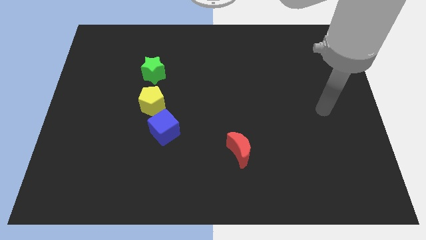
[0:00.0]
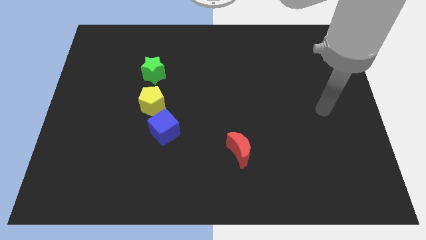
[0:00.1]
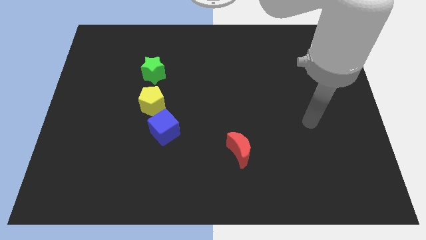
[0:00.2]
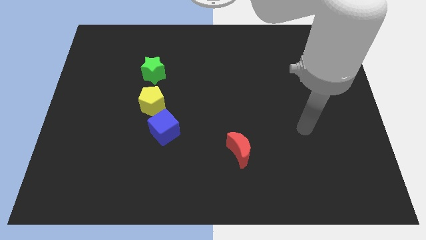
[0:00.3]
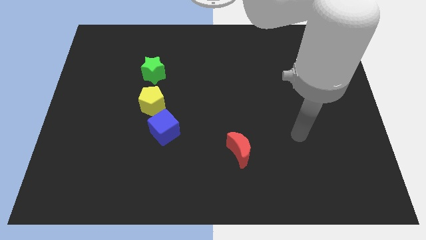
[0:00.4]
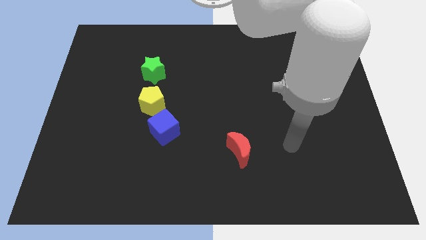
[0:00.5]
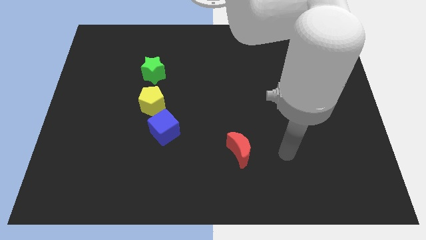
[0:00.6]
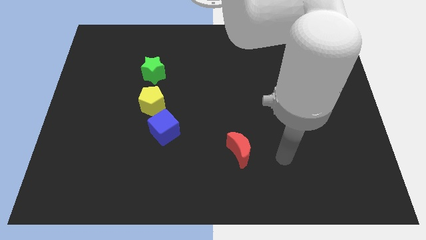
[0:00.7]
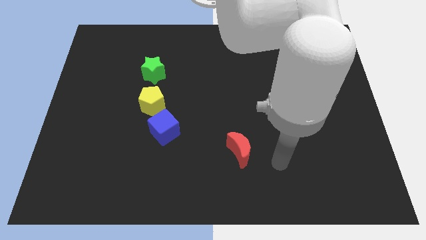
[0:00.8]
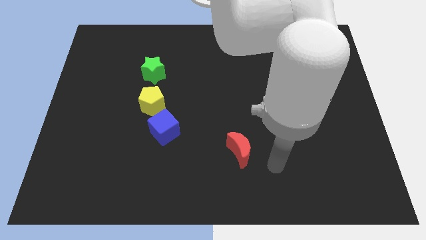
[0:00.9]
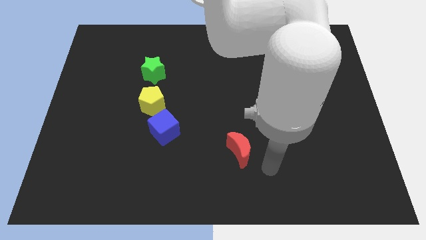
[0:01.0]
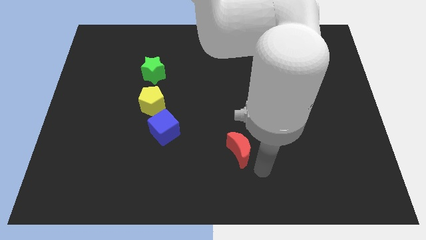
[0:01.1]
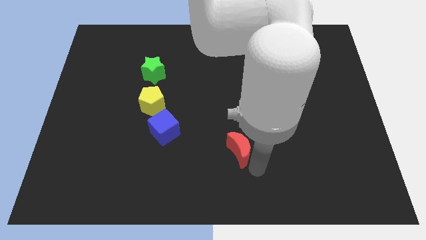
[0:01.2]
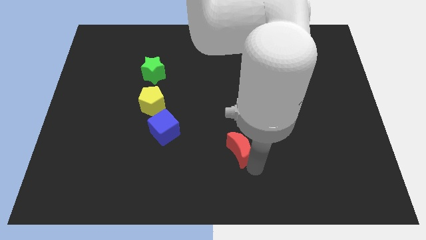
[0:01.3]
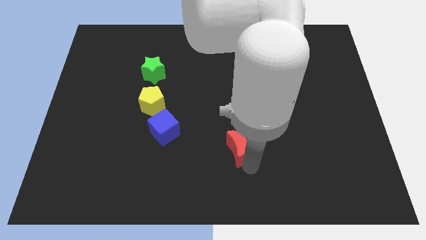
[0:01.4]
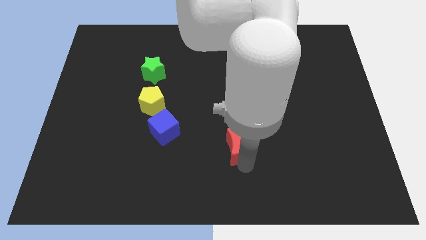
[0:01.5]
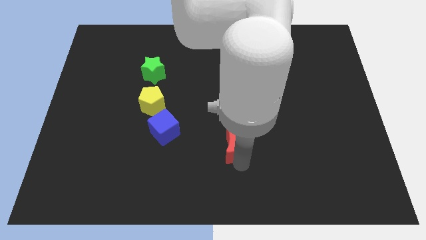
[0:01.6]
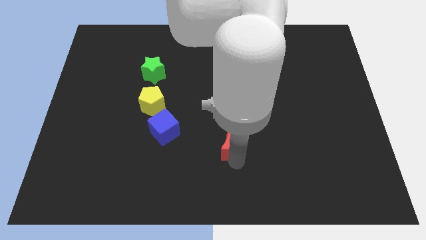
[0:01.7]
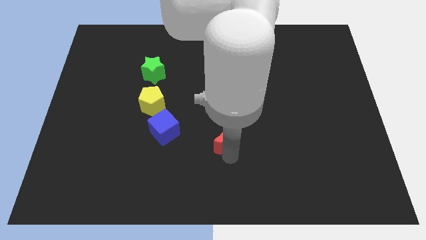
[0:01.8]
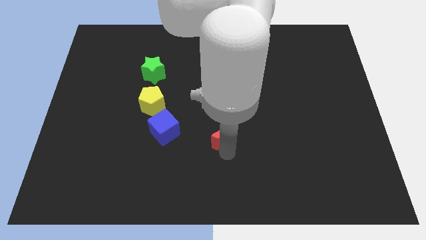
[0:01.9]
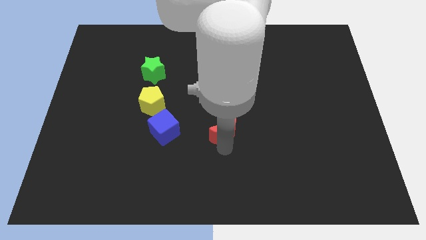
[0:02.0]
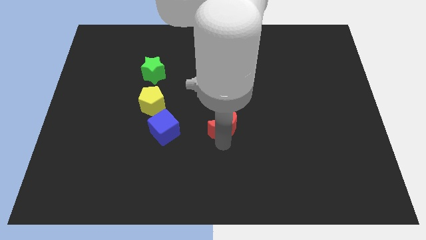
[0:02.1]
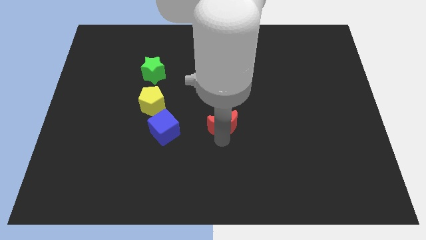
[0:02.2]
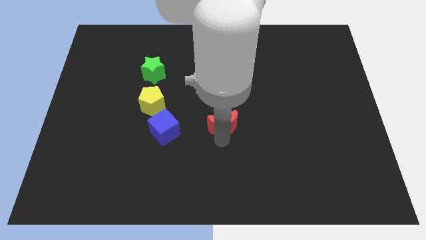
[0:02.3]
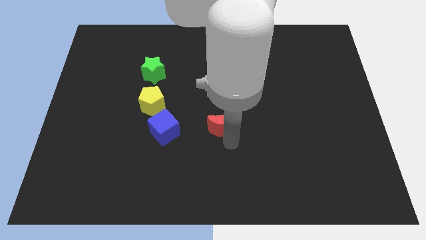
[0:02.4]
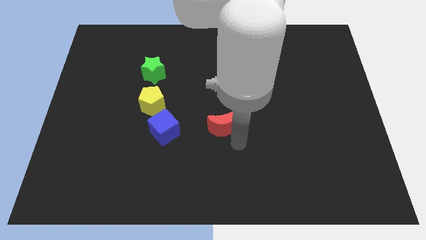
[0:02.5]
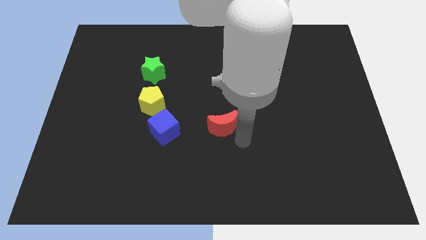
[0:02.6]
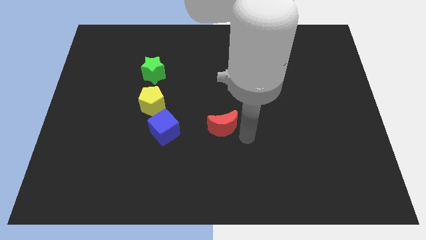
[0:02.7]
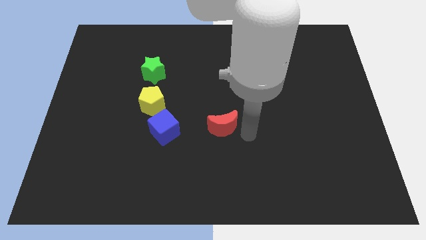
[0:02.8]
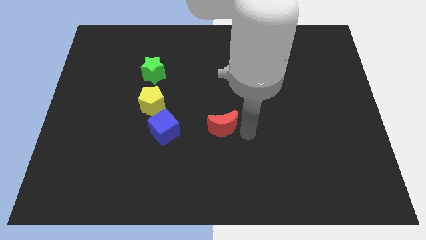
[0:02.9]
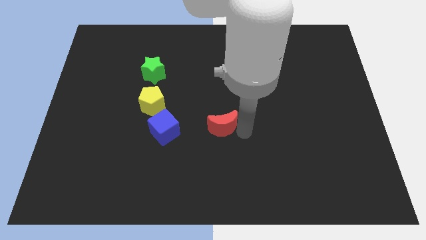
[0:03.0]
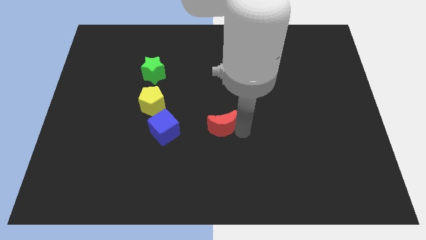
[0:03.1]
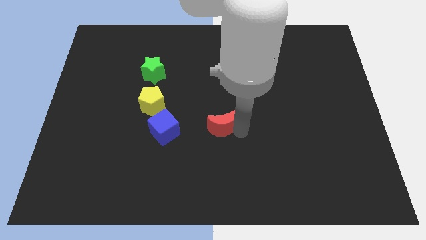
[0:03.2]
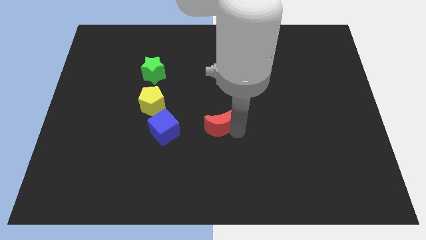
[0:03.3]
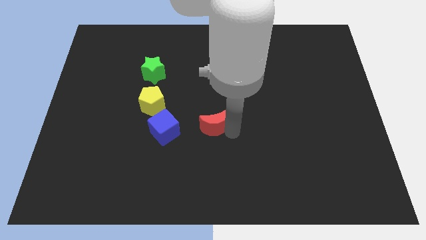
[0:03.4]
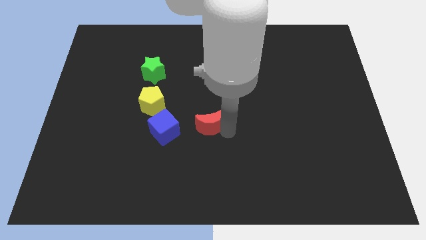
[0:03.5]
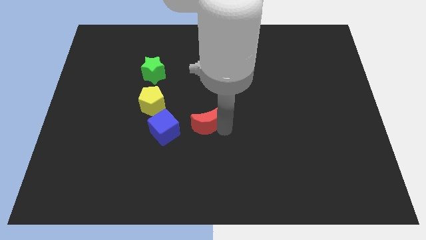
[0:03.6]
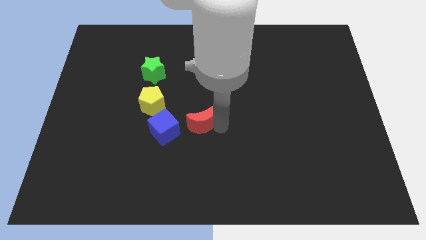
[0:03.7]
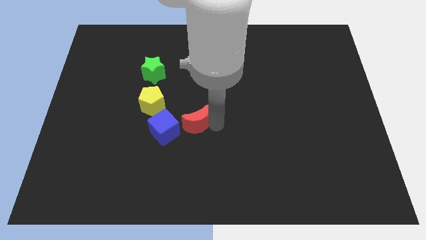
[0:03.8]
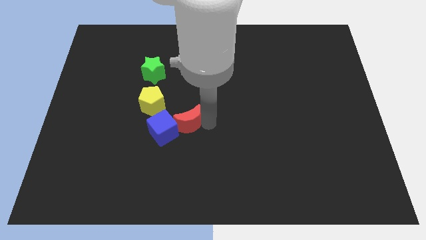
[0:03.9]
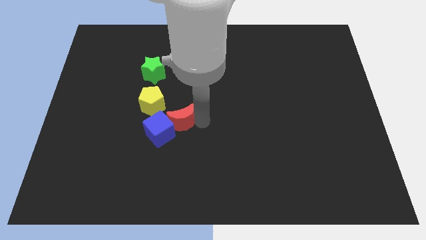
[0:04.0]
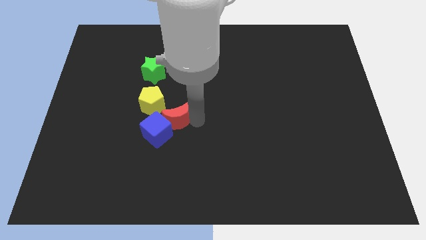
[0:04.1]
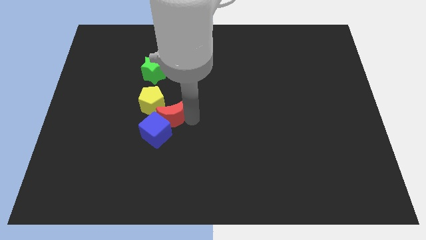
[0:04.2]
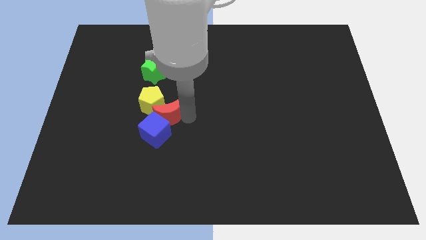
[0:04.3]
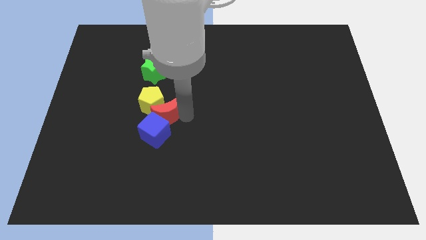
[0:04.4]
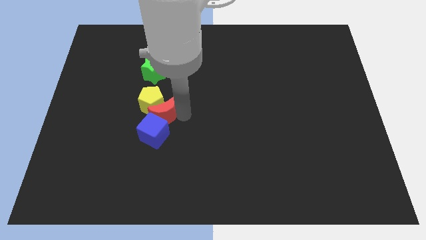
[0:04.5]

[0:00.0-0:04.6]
move the red block next to the yellow block

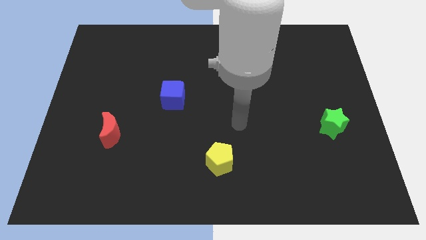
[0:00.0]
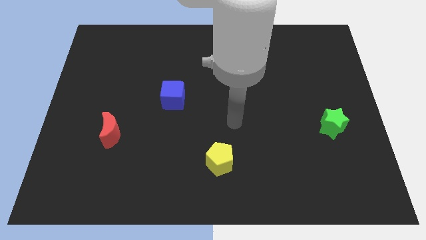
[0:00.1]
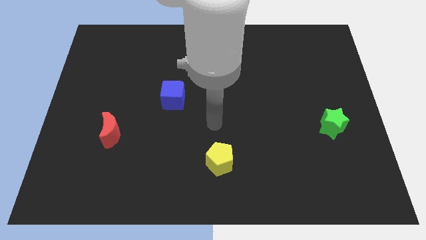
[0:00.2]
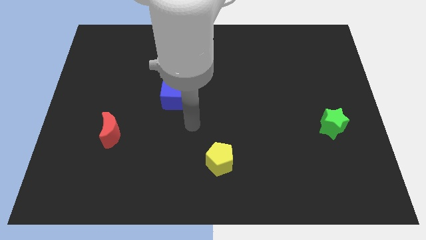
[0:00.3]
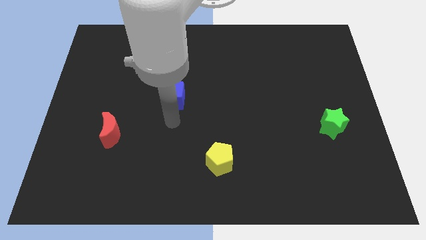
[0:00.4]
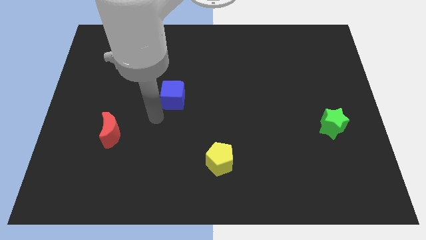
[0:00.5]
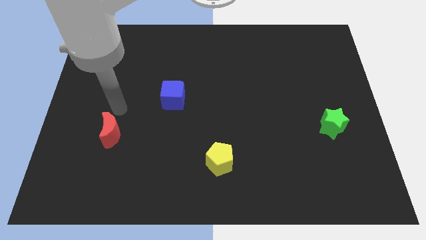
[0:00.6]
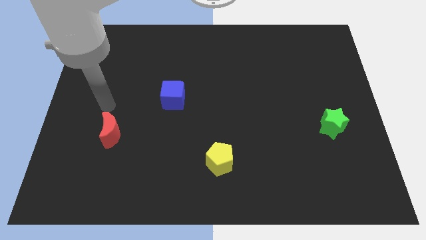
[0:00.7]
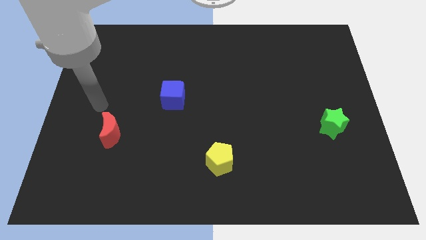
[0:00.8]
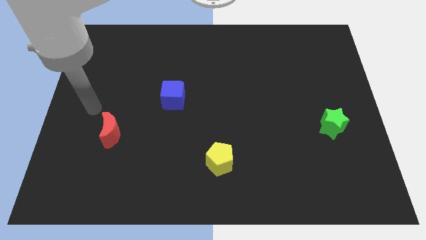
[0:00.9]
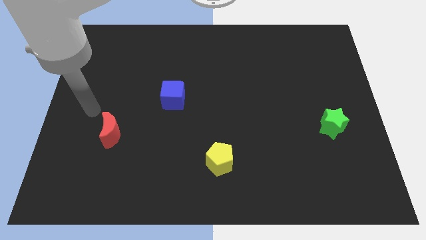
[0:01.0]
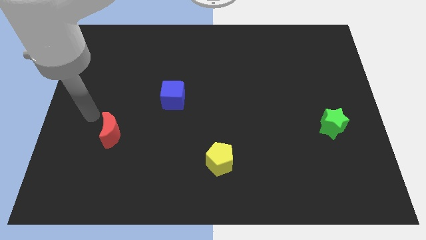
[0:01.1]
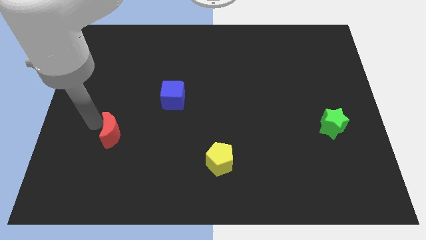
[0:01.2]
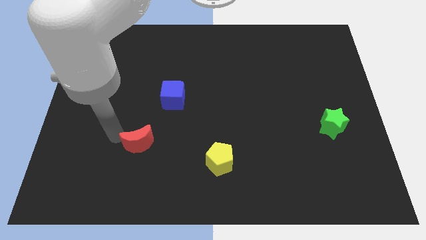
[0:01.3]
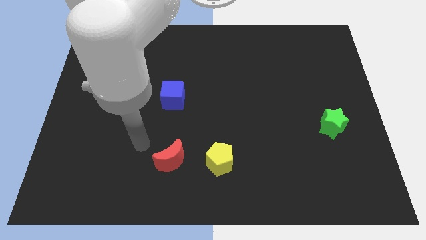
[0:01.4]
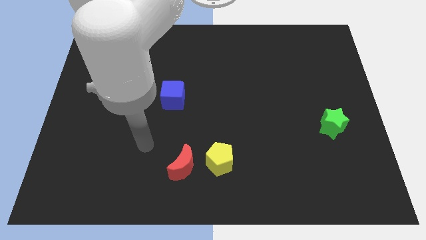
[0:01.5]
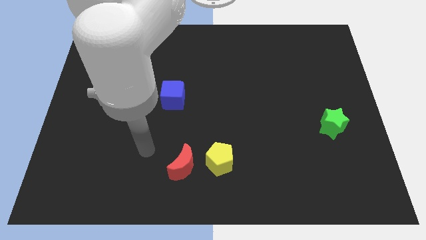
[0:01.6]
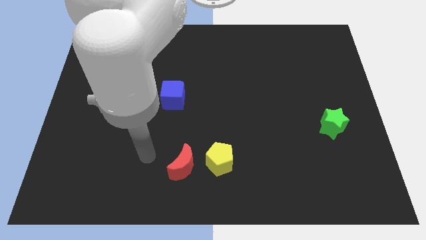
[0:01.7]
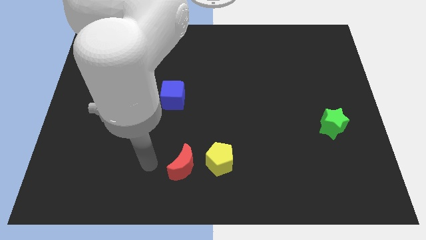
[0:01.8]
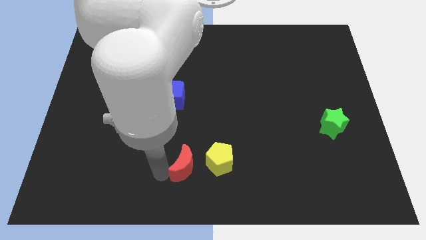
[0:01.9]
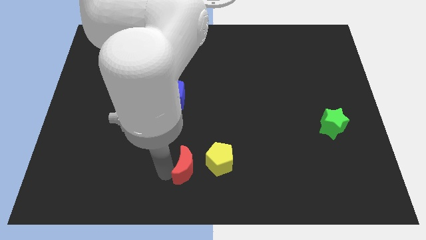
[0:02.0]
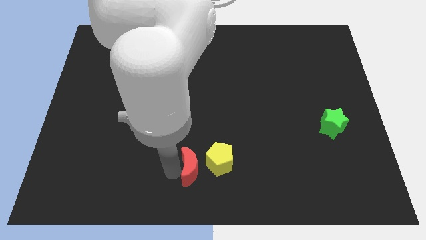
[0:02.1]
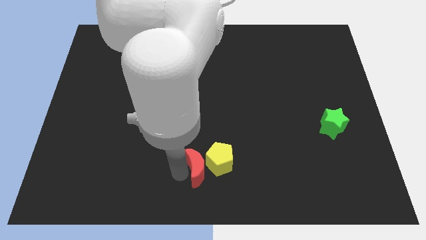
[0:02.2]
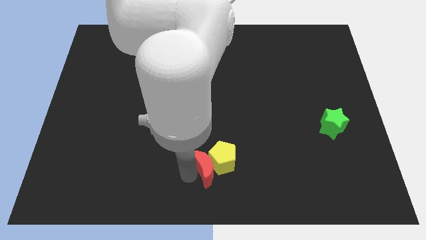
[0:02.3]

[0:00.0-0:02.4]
slide the moon towards the yellow block

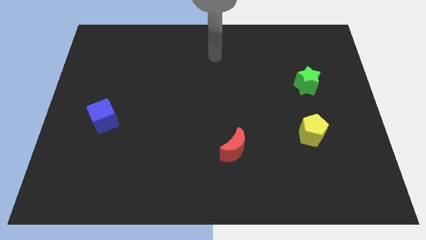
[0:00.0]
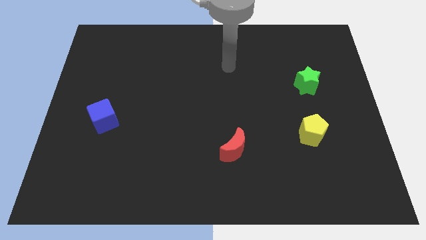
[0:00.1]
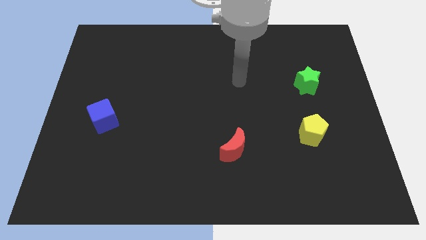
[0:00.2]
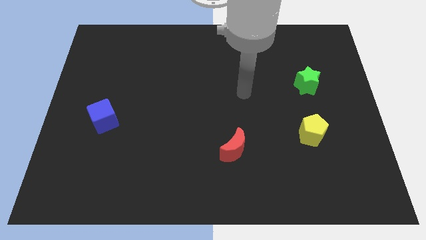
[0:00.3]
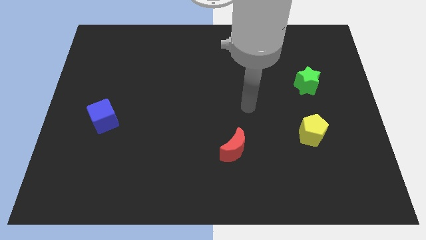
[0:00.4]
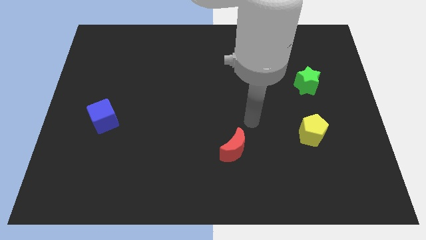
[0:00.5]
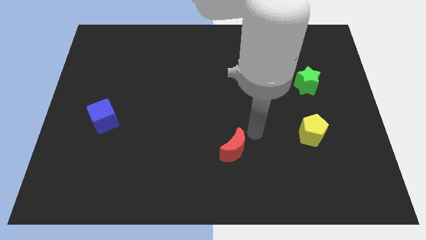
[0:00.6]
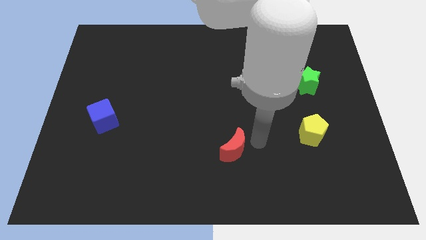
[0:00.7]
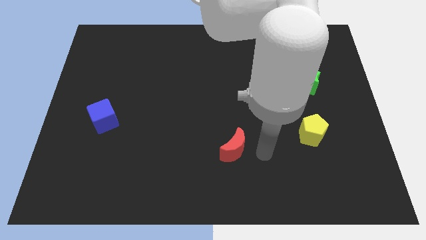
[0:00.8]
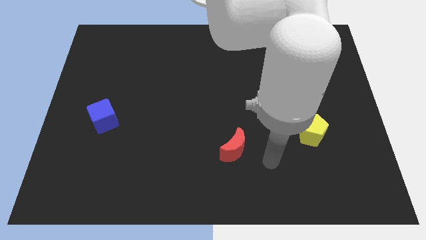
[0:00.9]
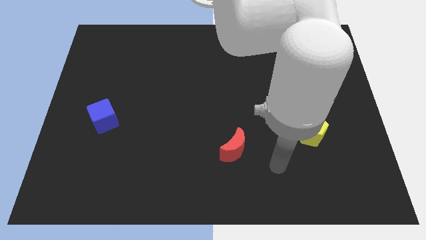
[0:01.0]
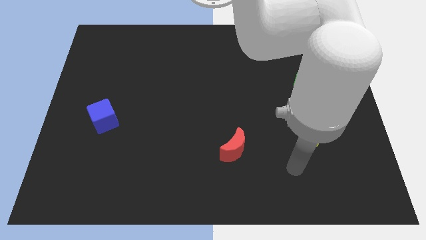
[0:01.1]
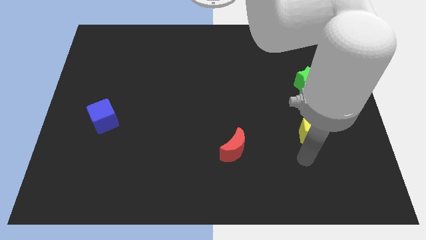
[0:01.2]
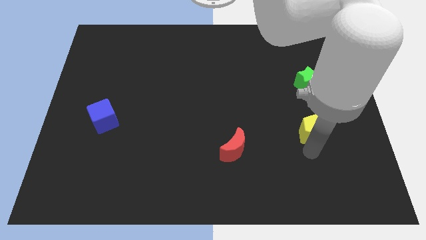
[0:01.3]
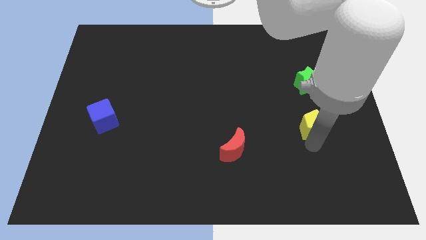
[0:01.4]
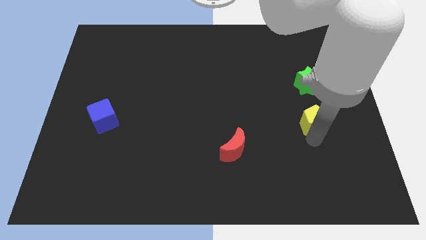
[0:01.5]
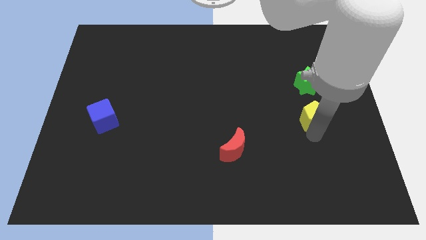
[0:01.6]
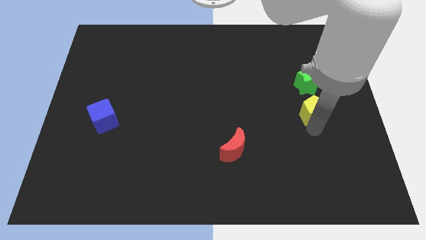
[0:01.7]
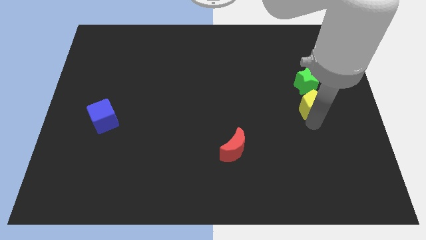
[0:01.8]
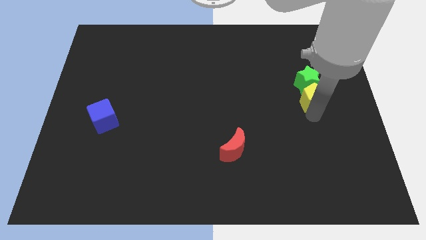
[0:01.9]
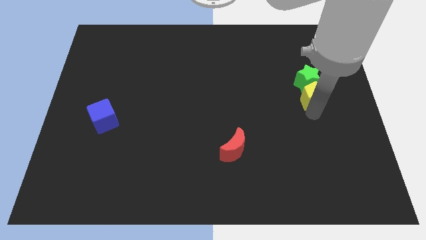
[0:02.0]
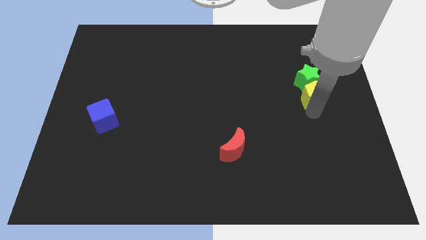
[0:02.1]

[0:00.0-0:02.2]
put the yellow pentagon next to the green block
